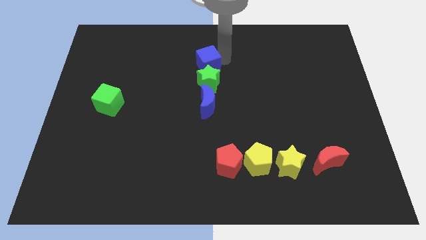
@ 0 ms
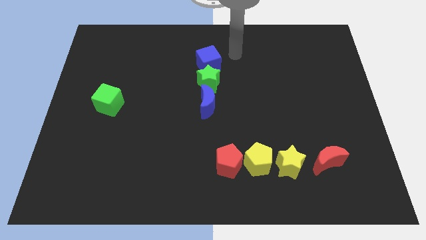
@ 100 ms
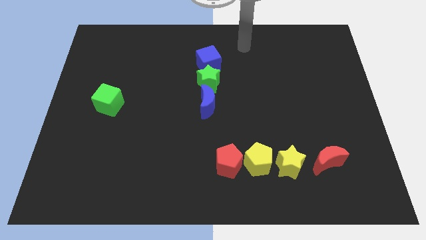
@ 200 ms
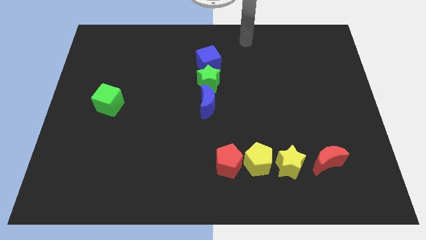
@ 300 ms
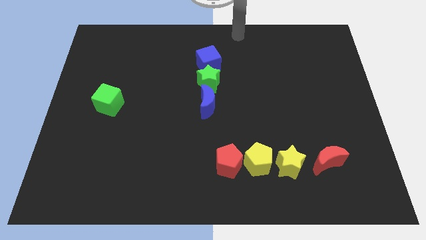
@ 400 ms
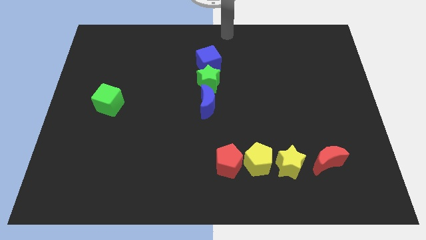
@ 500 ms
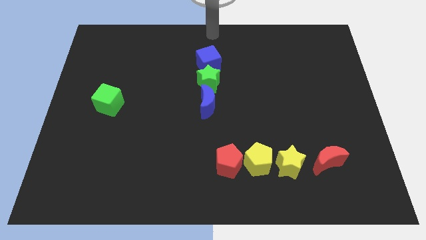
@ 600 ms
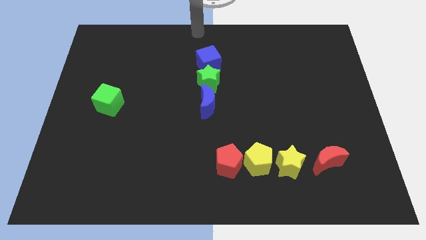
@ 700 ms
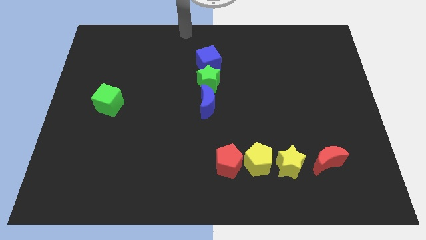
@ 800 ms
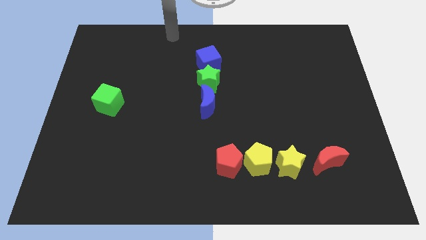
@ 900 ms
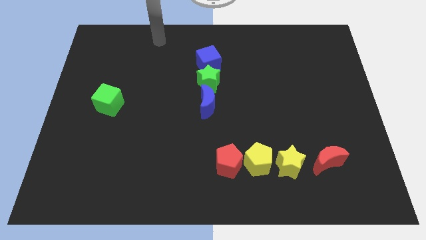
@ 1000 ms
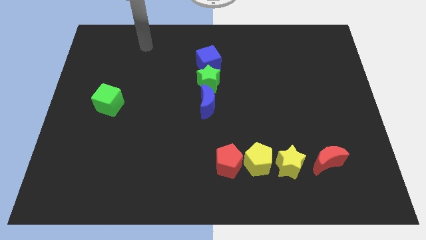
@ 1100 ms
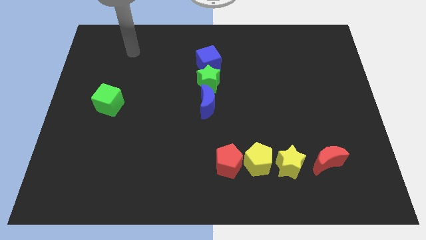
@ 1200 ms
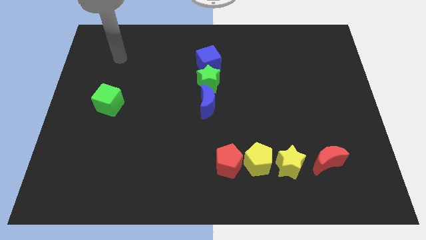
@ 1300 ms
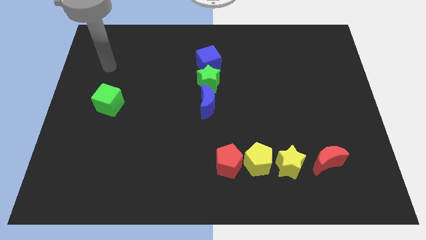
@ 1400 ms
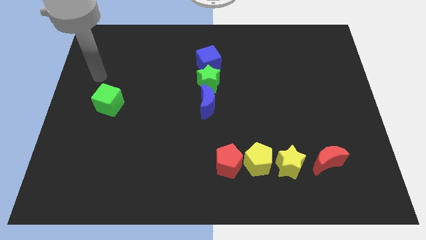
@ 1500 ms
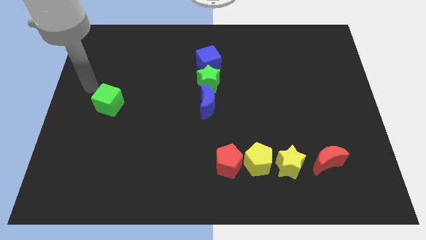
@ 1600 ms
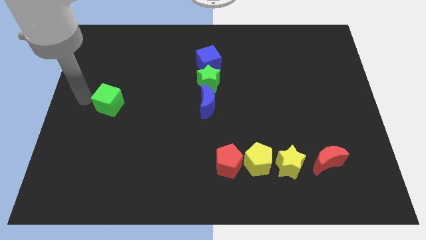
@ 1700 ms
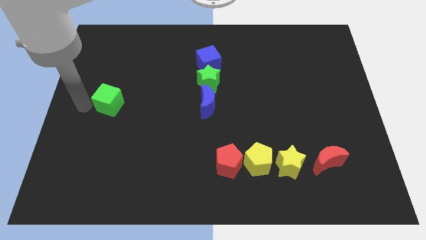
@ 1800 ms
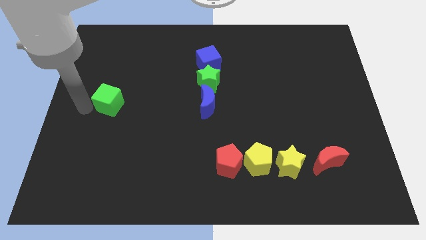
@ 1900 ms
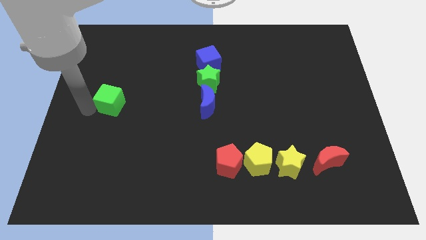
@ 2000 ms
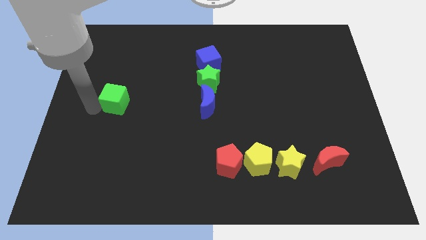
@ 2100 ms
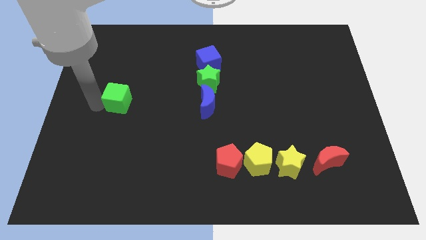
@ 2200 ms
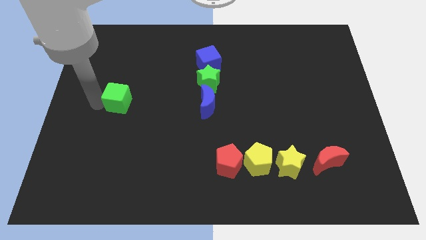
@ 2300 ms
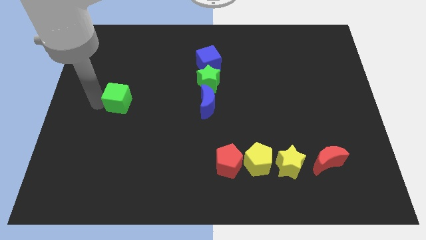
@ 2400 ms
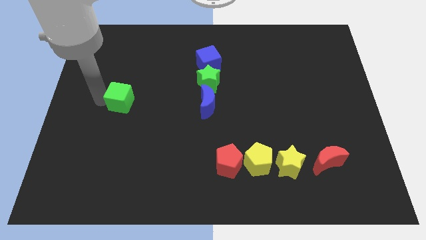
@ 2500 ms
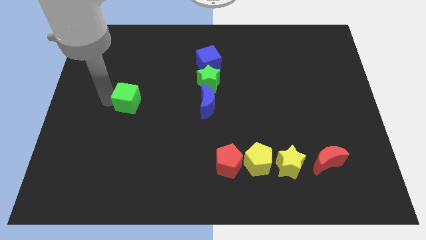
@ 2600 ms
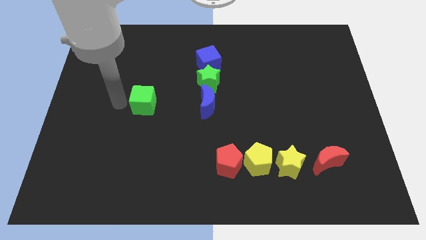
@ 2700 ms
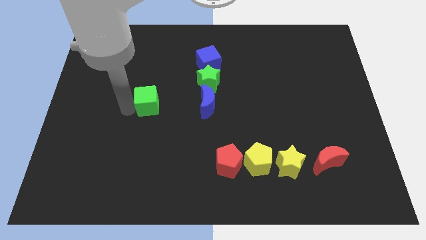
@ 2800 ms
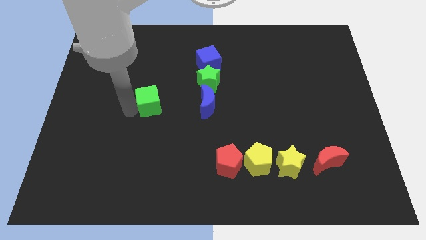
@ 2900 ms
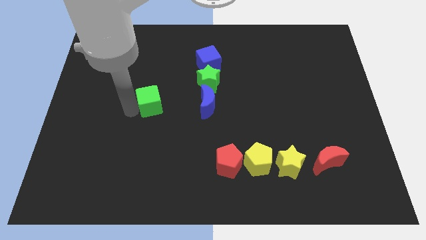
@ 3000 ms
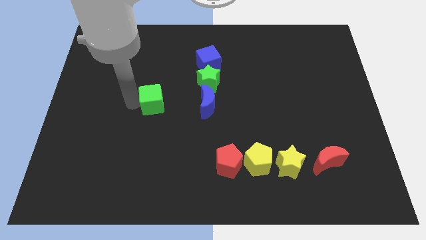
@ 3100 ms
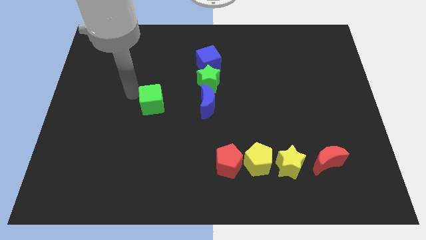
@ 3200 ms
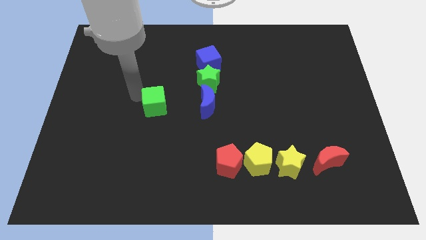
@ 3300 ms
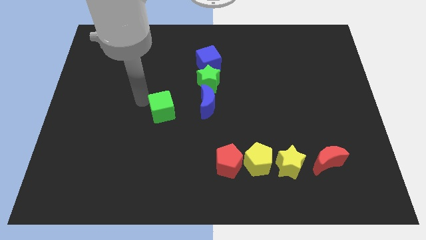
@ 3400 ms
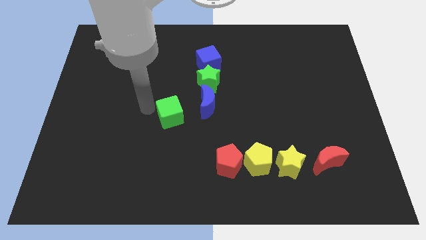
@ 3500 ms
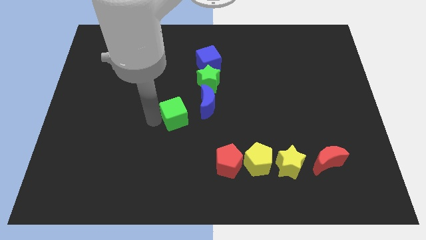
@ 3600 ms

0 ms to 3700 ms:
move green cube towards the blue crescent

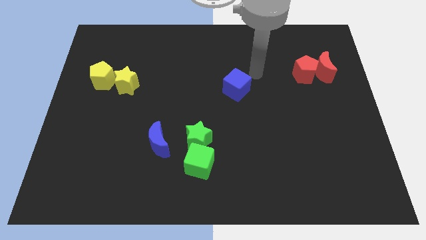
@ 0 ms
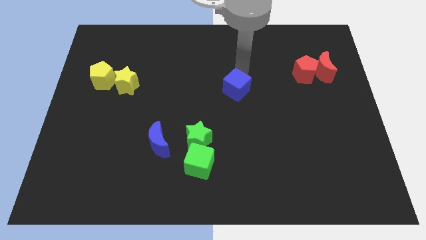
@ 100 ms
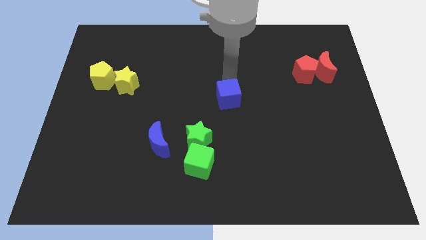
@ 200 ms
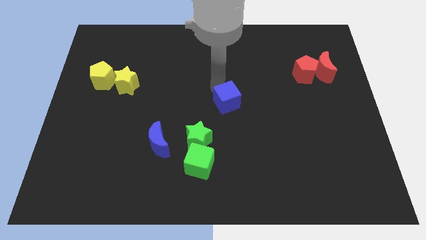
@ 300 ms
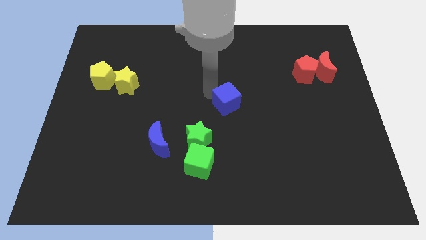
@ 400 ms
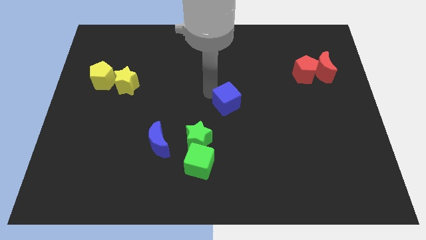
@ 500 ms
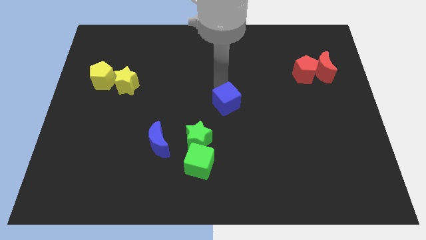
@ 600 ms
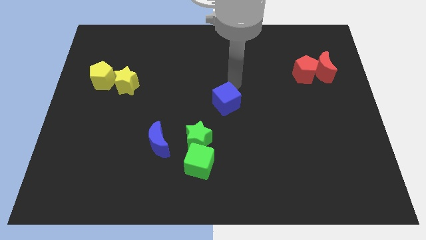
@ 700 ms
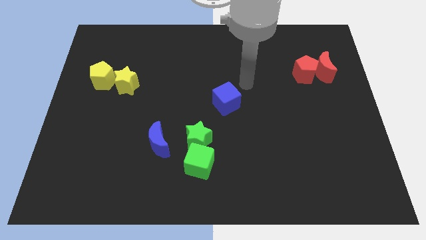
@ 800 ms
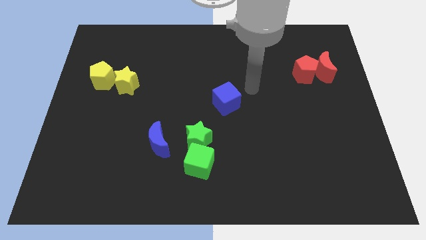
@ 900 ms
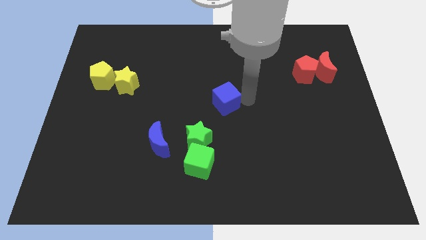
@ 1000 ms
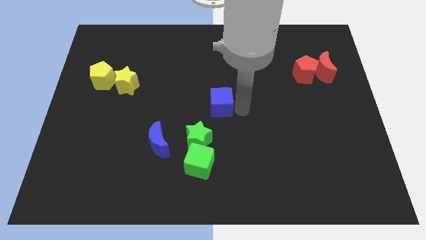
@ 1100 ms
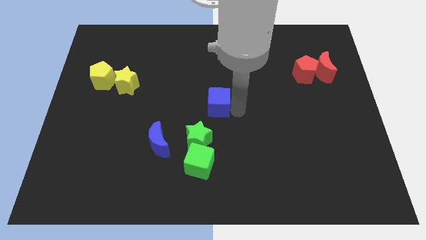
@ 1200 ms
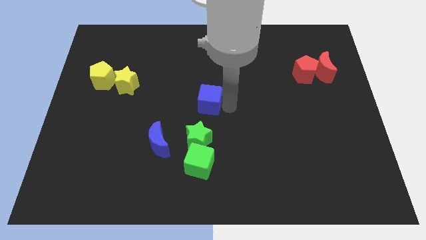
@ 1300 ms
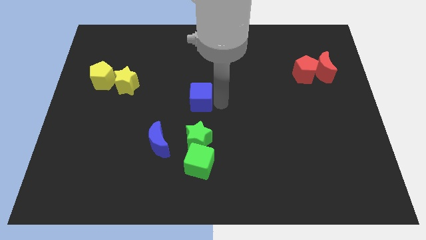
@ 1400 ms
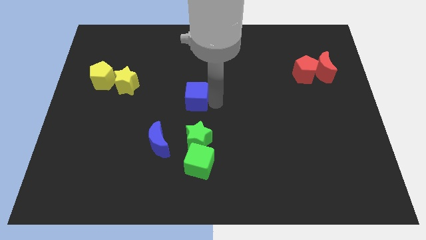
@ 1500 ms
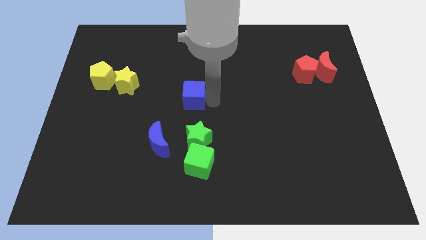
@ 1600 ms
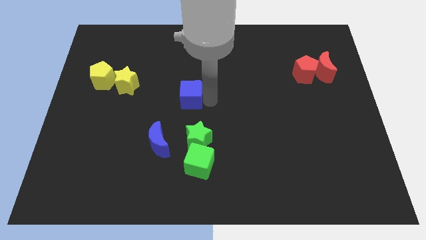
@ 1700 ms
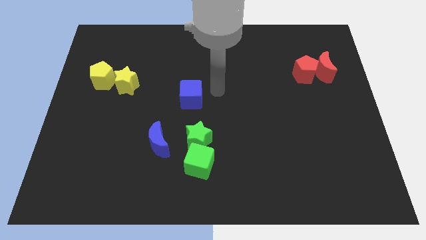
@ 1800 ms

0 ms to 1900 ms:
drag blue cube towards top left to the green star

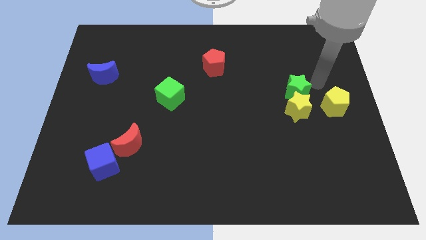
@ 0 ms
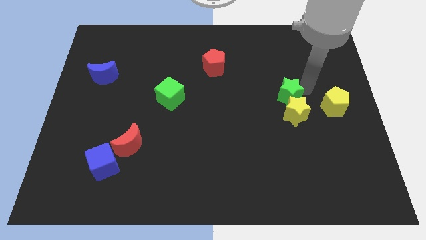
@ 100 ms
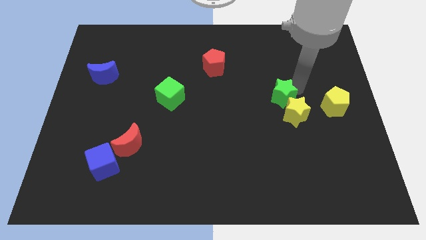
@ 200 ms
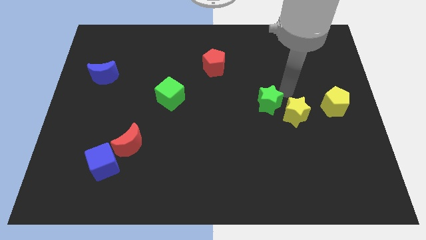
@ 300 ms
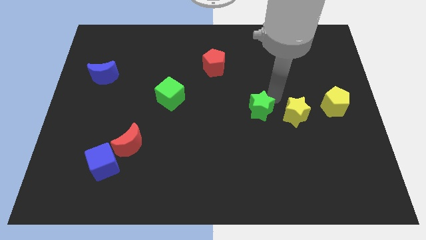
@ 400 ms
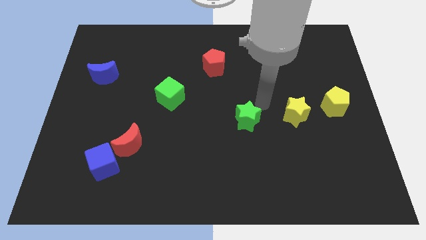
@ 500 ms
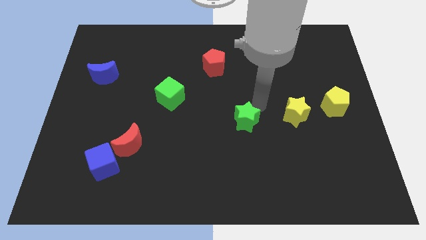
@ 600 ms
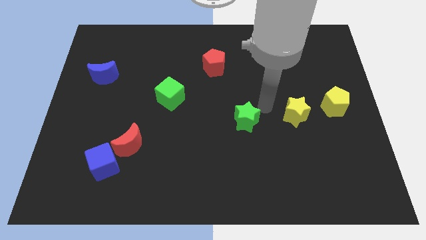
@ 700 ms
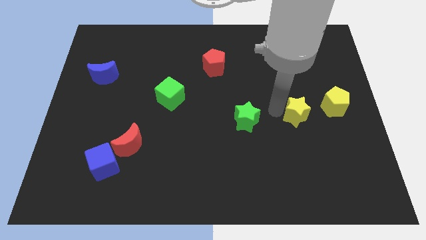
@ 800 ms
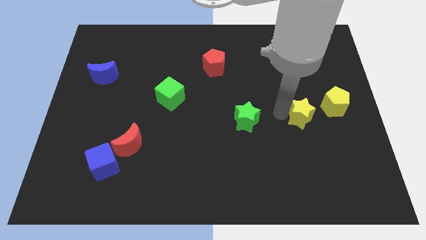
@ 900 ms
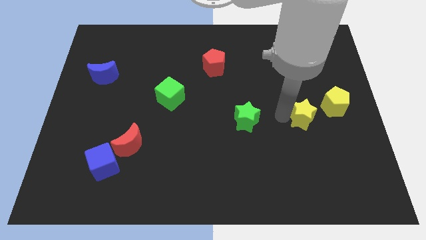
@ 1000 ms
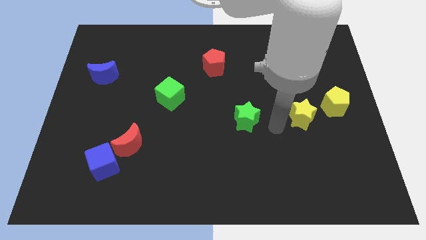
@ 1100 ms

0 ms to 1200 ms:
separate the green star from the yellow star

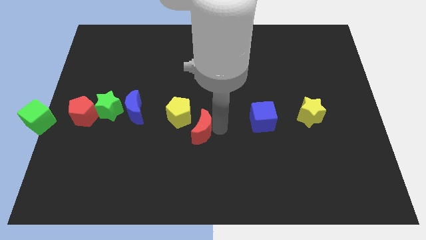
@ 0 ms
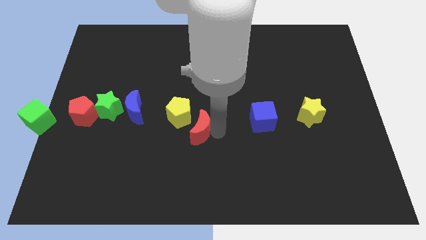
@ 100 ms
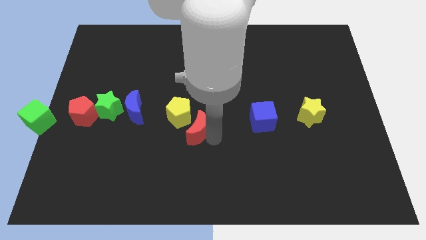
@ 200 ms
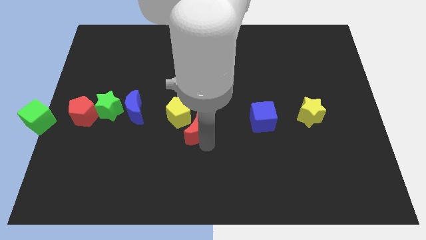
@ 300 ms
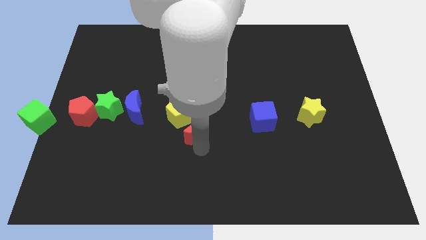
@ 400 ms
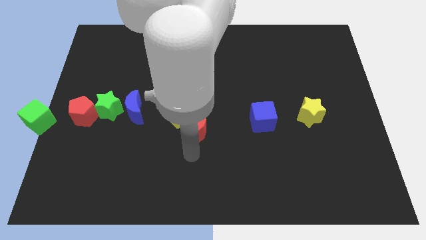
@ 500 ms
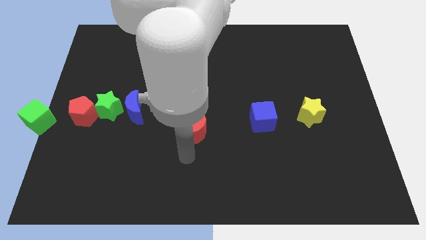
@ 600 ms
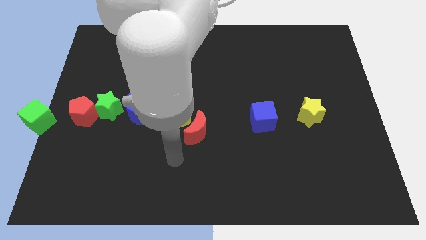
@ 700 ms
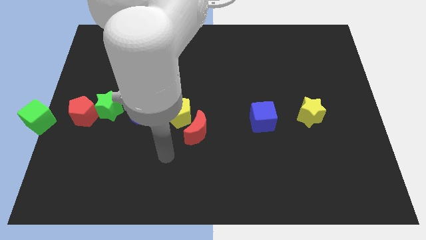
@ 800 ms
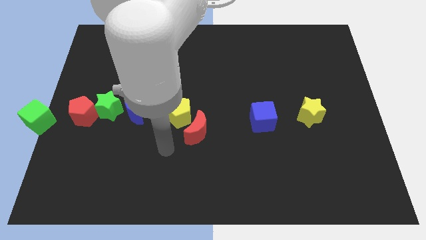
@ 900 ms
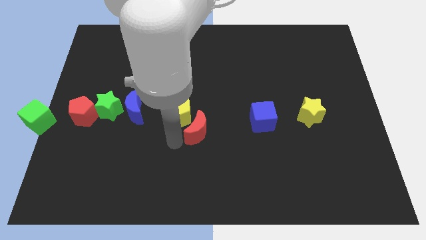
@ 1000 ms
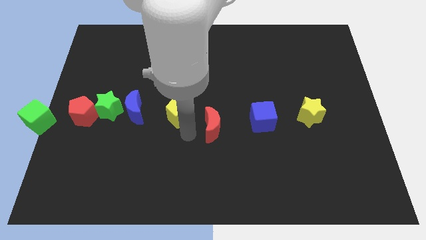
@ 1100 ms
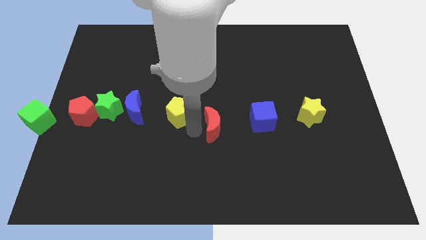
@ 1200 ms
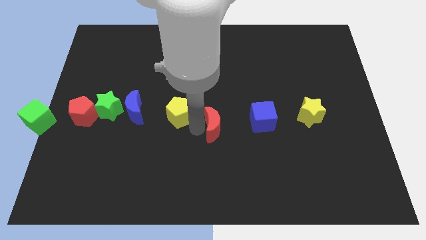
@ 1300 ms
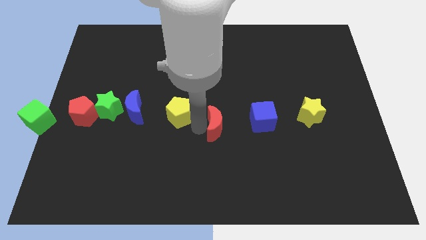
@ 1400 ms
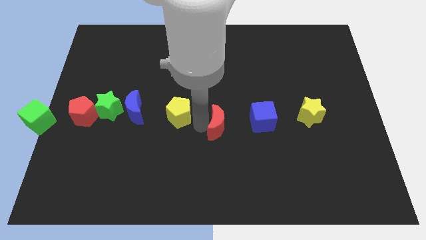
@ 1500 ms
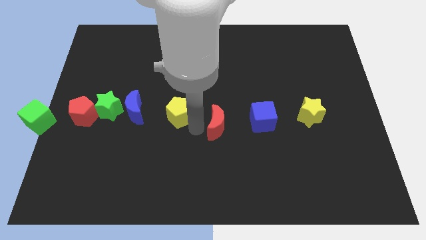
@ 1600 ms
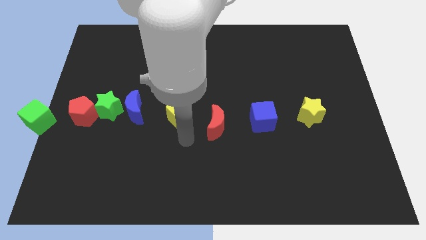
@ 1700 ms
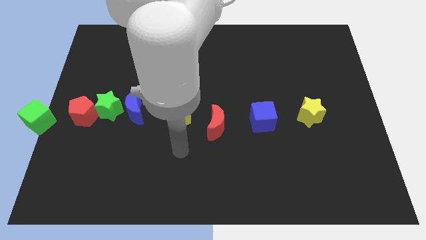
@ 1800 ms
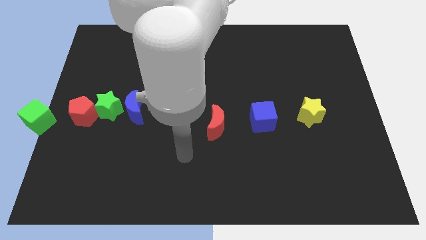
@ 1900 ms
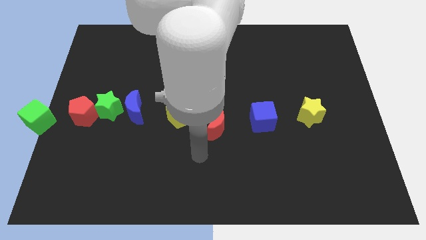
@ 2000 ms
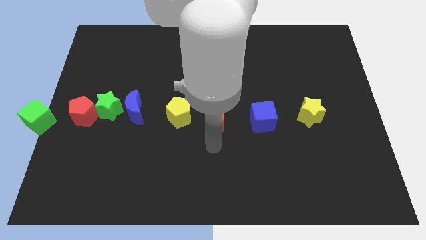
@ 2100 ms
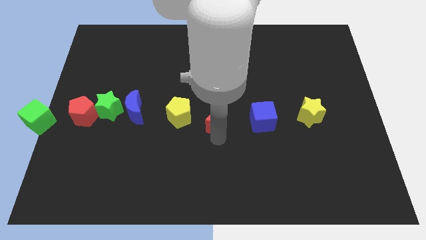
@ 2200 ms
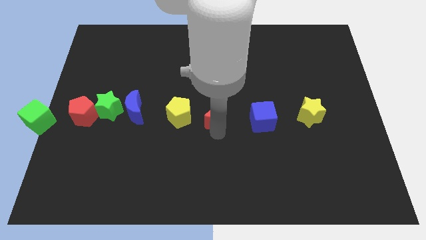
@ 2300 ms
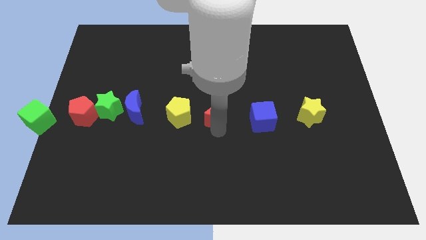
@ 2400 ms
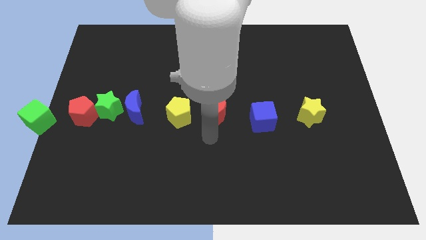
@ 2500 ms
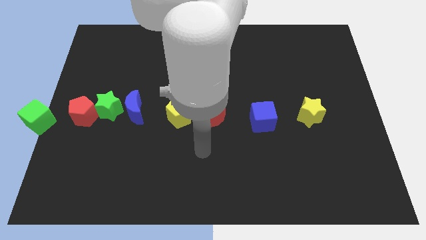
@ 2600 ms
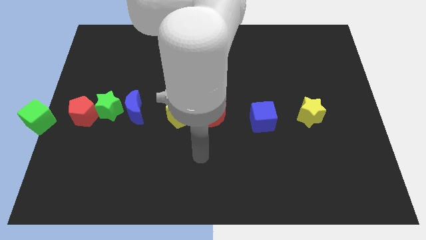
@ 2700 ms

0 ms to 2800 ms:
place the red moon in between the yellow pentagon and blue cube
